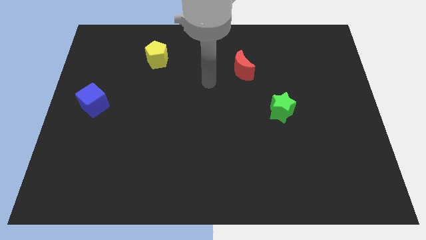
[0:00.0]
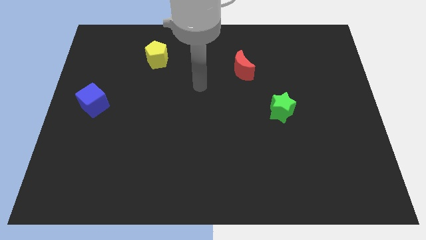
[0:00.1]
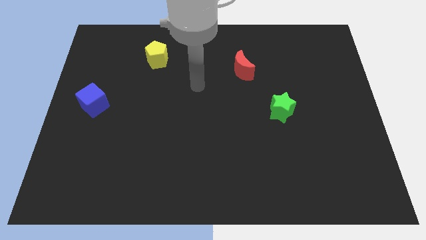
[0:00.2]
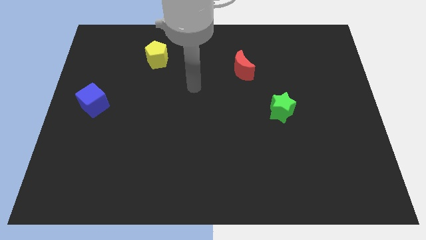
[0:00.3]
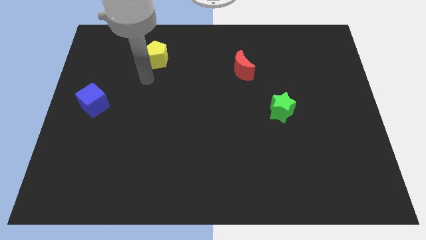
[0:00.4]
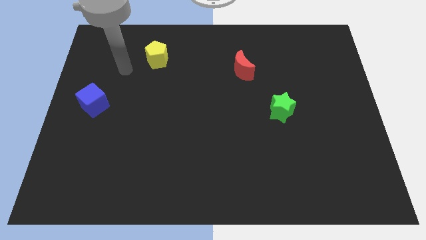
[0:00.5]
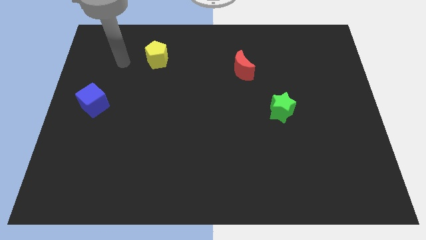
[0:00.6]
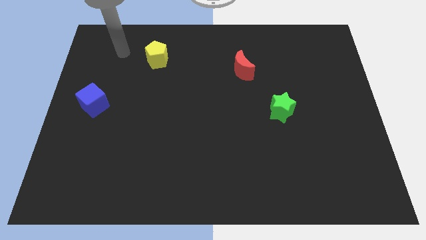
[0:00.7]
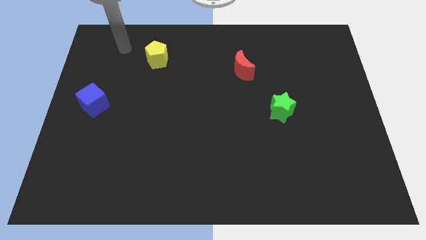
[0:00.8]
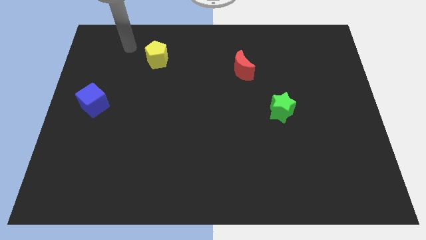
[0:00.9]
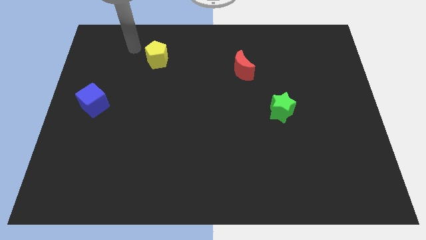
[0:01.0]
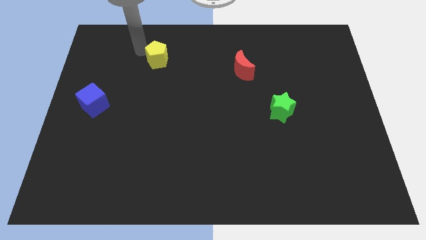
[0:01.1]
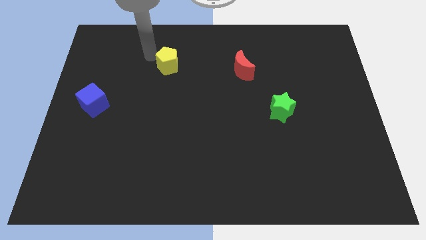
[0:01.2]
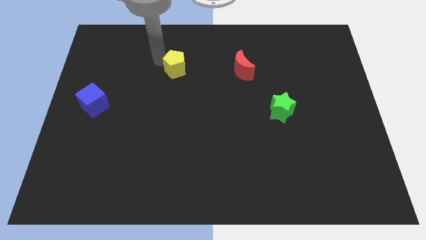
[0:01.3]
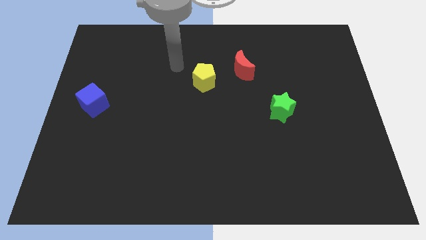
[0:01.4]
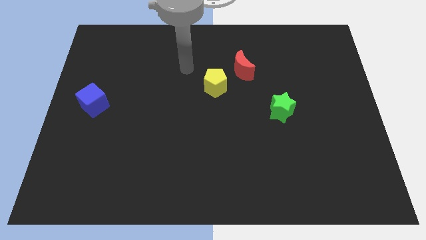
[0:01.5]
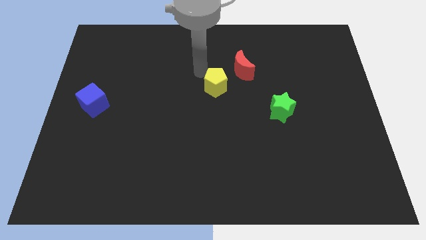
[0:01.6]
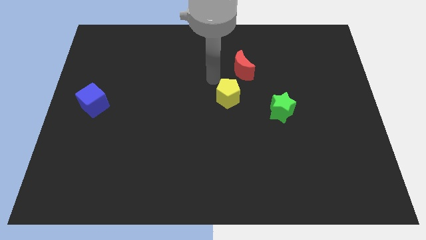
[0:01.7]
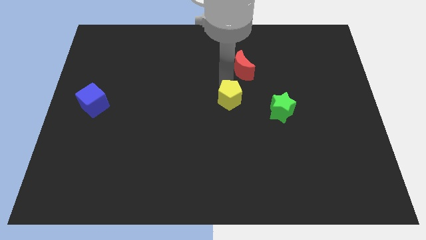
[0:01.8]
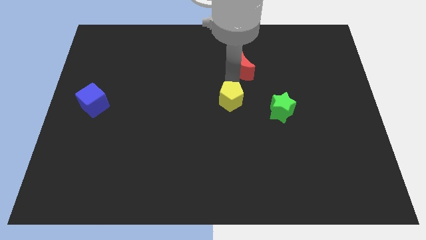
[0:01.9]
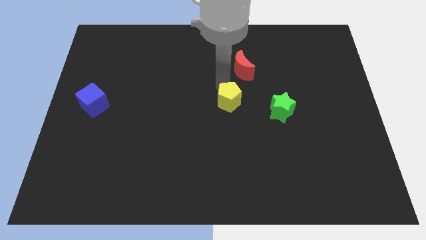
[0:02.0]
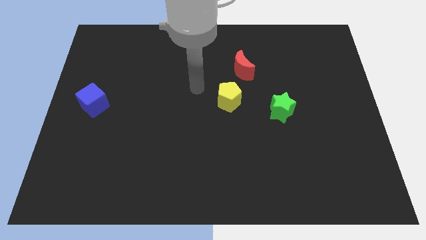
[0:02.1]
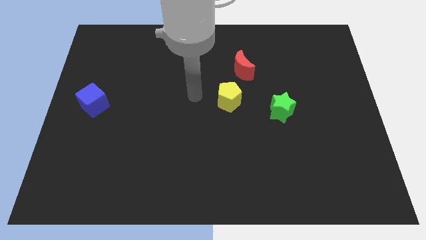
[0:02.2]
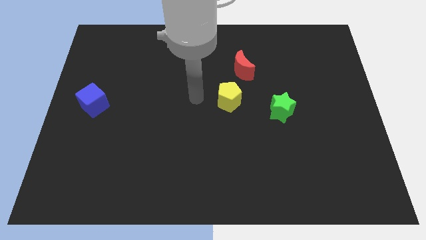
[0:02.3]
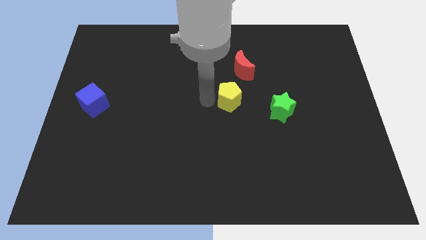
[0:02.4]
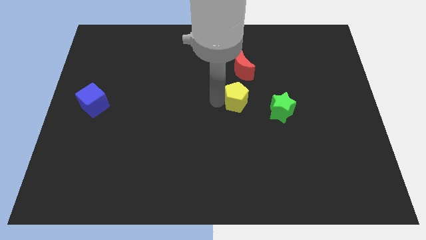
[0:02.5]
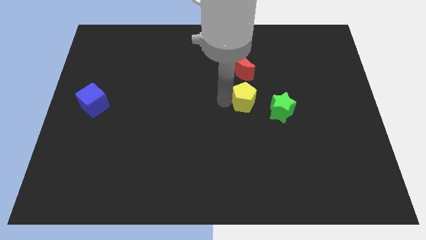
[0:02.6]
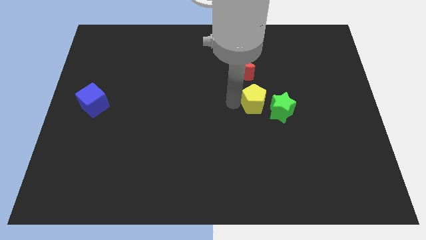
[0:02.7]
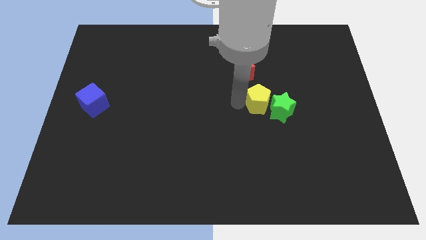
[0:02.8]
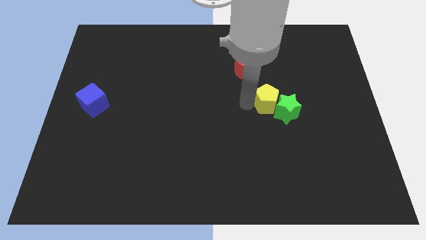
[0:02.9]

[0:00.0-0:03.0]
push the yellow block close to the star

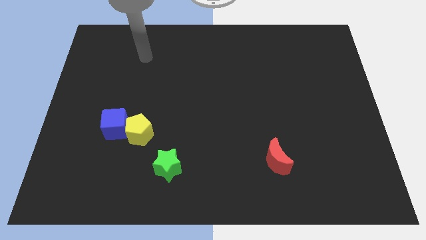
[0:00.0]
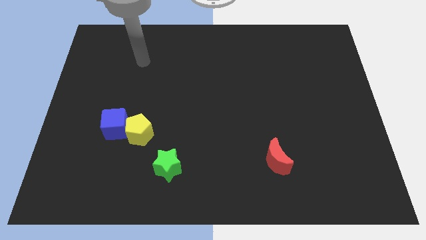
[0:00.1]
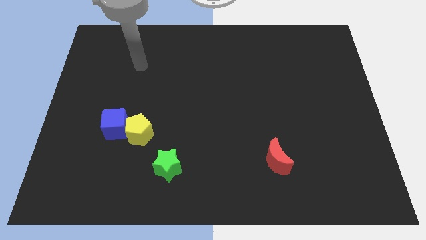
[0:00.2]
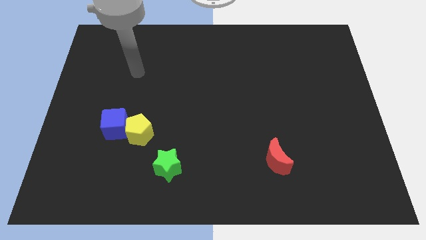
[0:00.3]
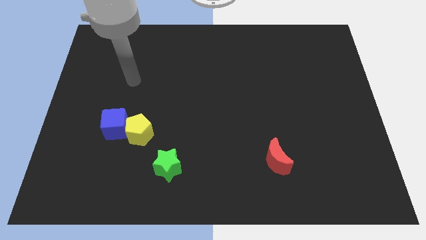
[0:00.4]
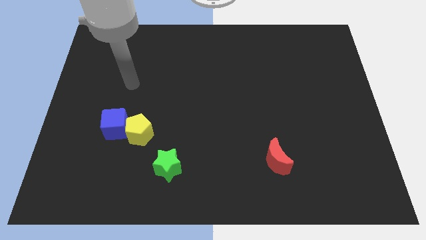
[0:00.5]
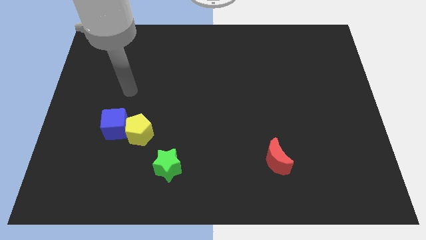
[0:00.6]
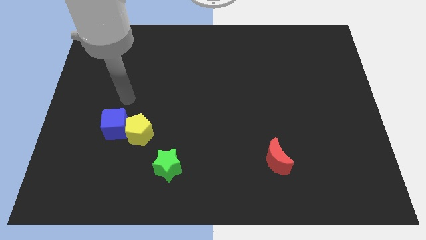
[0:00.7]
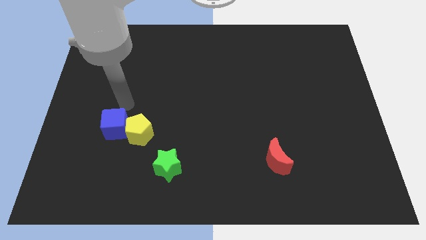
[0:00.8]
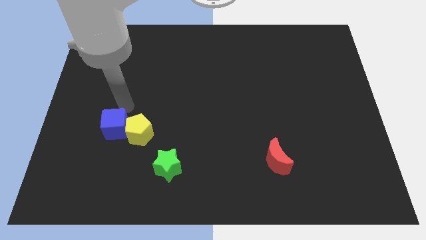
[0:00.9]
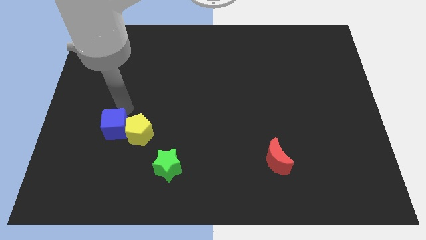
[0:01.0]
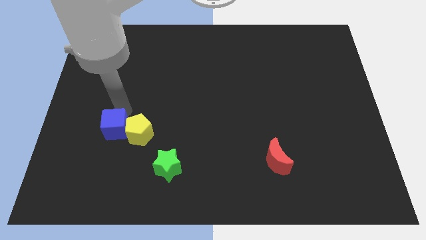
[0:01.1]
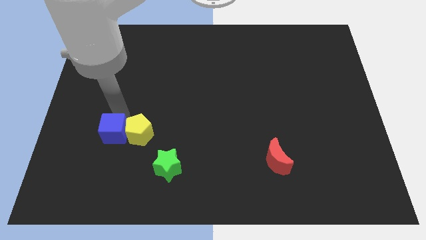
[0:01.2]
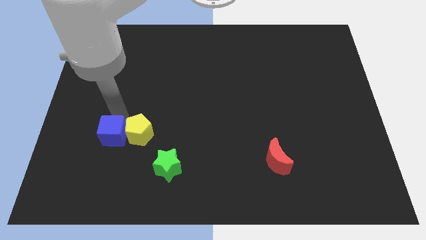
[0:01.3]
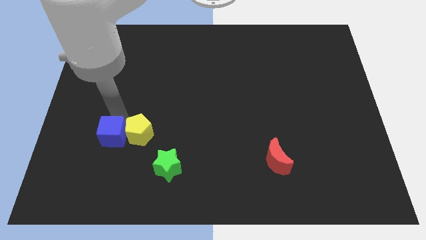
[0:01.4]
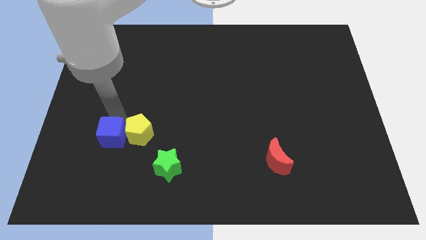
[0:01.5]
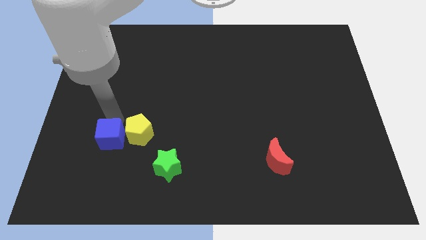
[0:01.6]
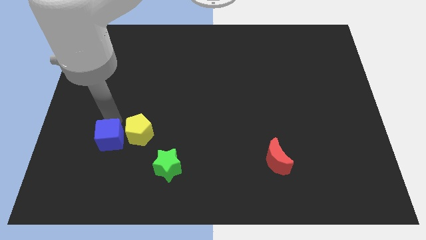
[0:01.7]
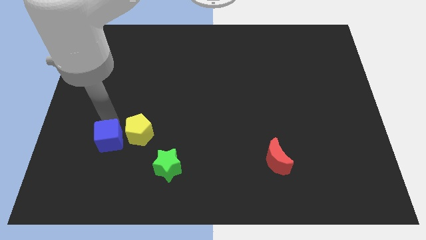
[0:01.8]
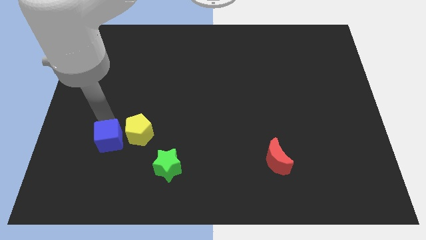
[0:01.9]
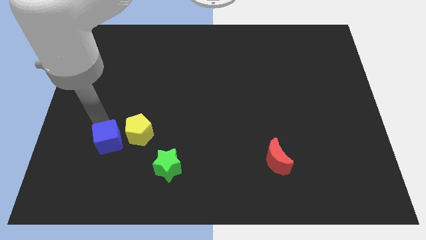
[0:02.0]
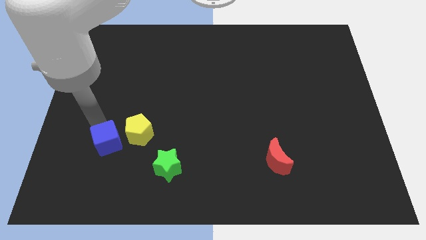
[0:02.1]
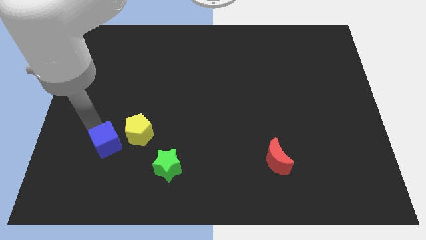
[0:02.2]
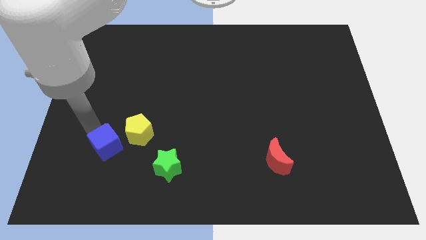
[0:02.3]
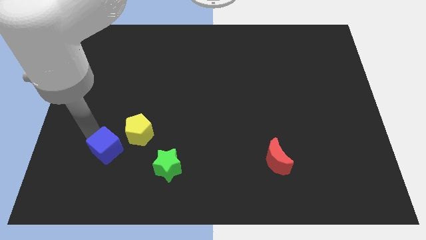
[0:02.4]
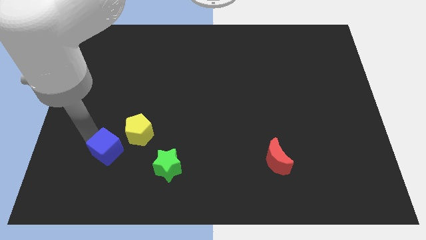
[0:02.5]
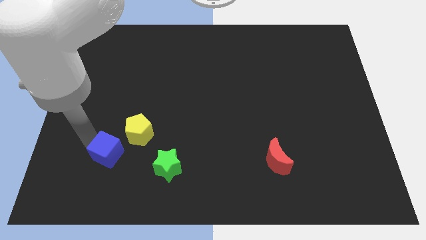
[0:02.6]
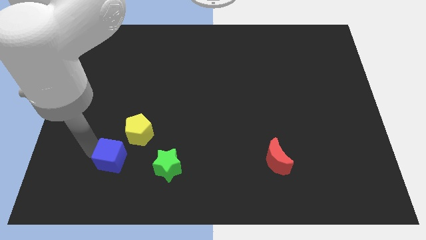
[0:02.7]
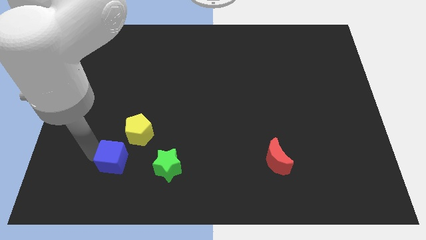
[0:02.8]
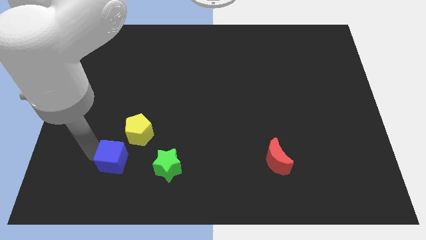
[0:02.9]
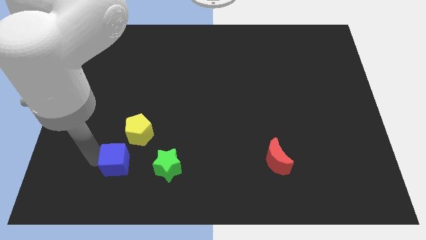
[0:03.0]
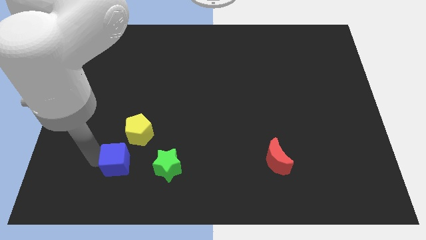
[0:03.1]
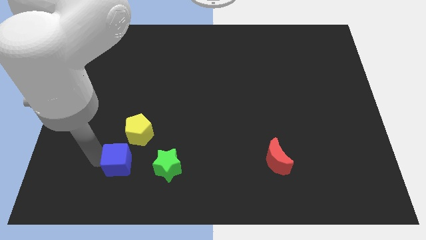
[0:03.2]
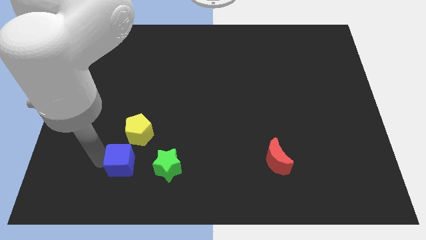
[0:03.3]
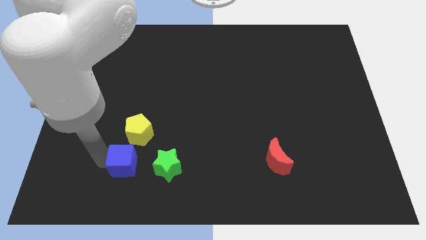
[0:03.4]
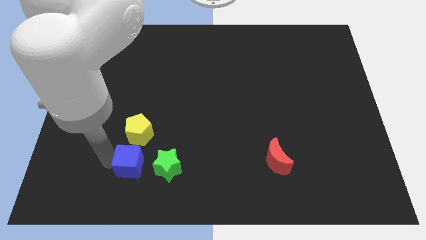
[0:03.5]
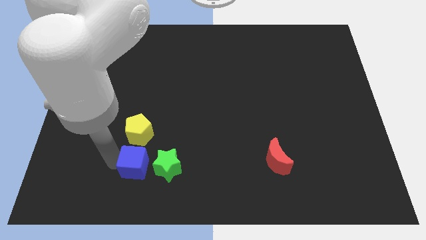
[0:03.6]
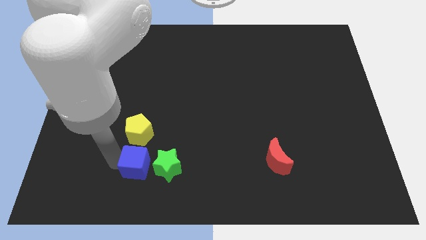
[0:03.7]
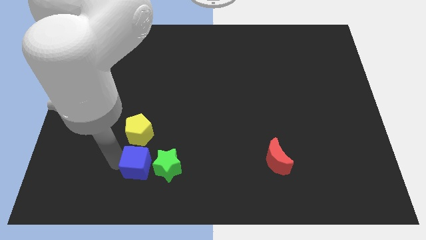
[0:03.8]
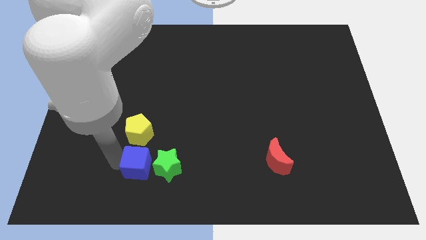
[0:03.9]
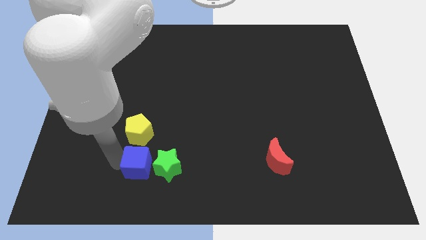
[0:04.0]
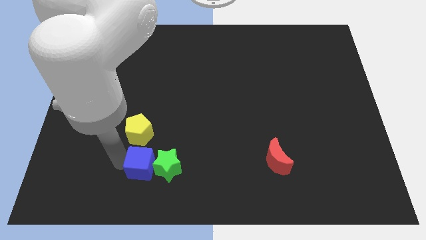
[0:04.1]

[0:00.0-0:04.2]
push the blue cube to the star

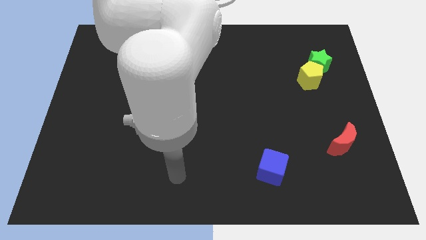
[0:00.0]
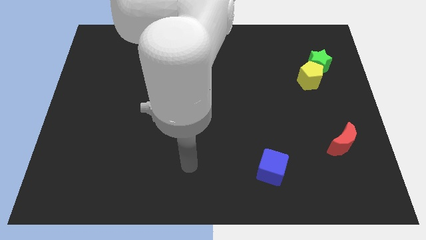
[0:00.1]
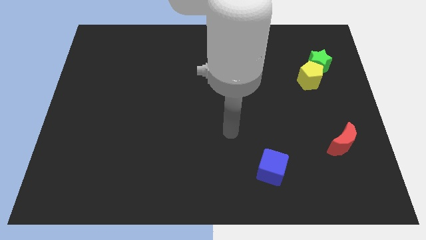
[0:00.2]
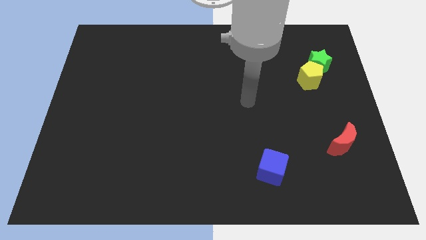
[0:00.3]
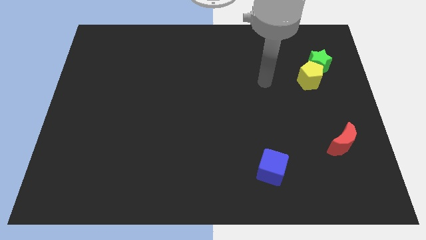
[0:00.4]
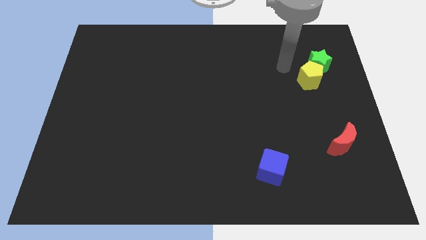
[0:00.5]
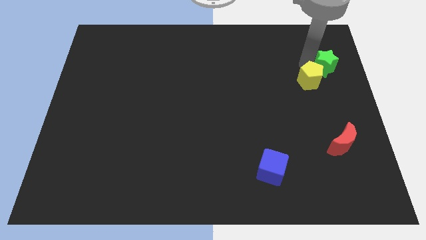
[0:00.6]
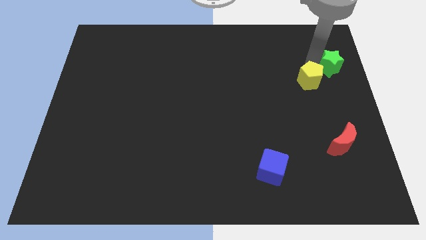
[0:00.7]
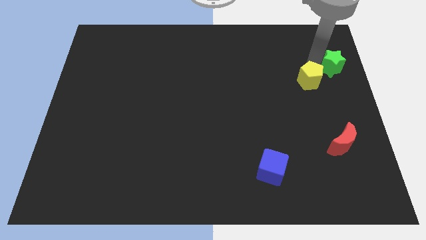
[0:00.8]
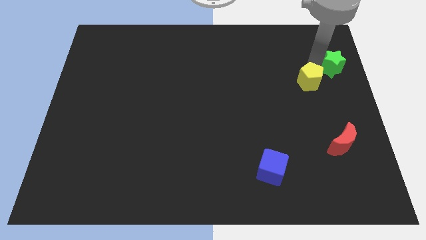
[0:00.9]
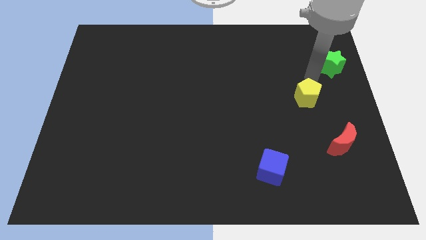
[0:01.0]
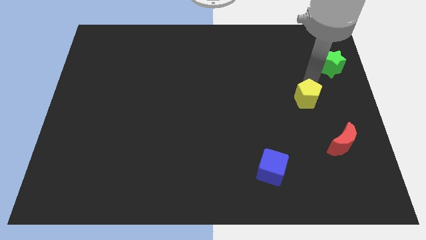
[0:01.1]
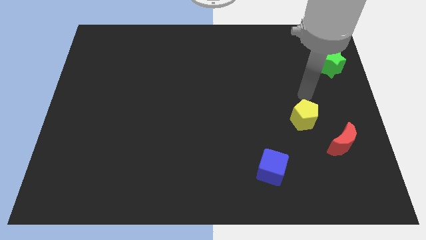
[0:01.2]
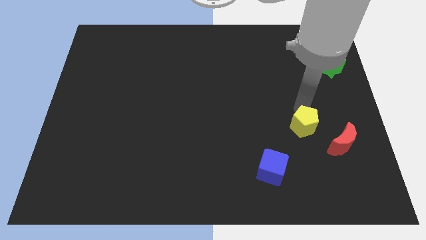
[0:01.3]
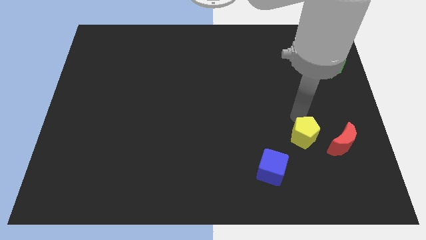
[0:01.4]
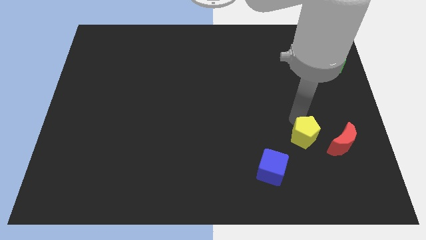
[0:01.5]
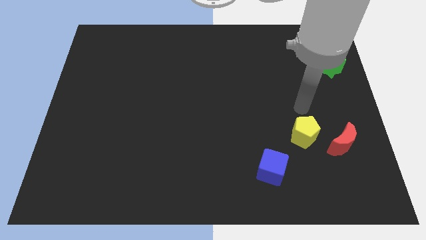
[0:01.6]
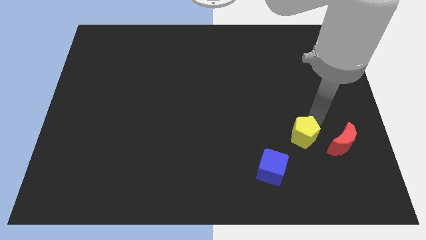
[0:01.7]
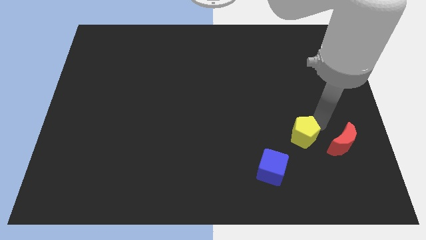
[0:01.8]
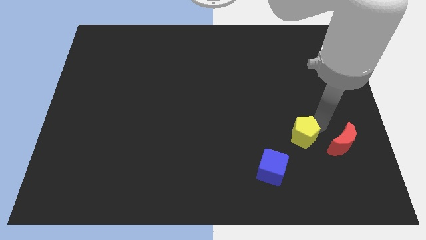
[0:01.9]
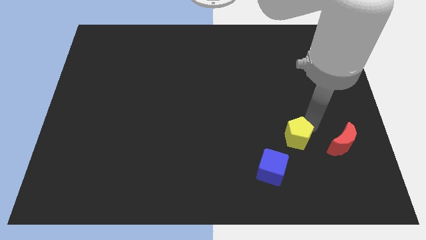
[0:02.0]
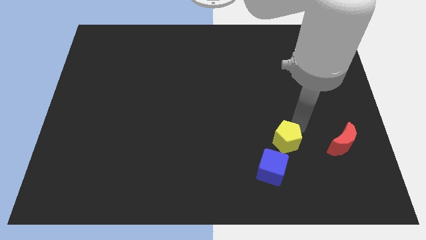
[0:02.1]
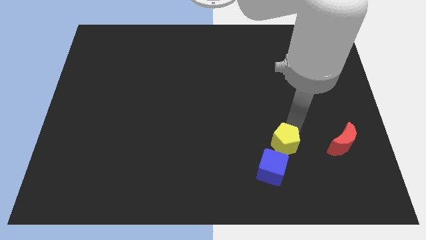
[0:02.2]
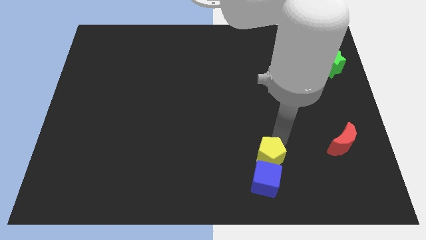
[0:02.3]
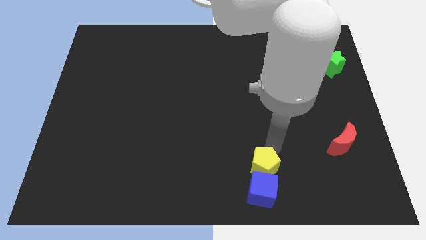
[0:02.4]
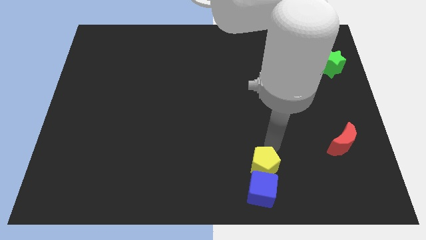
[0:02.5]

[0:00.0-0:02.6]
move the pentagon close to the cube
